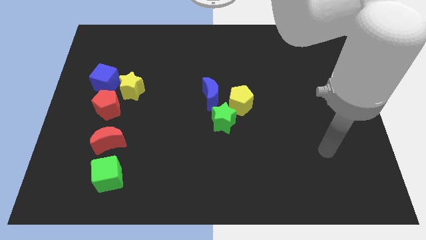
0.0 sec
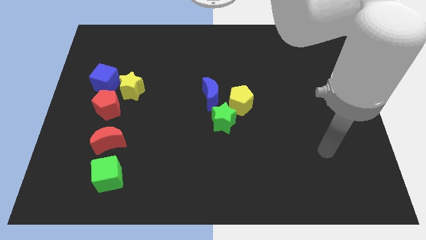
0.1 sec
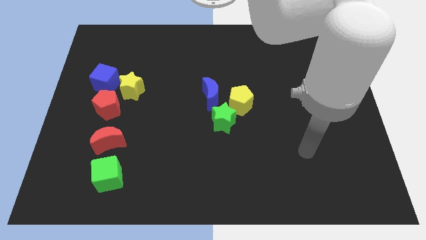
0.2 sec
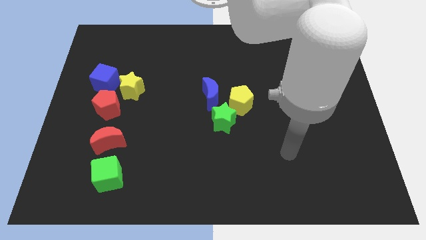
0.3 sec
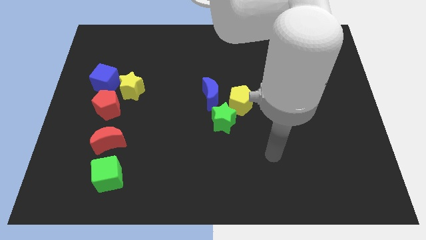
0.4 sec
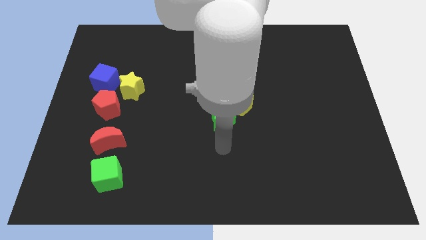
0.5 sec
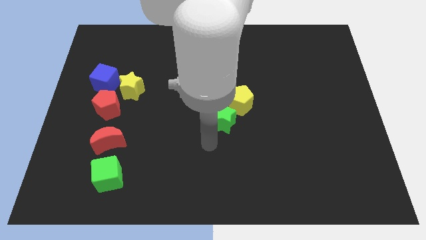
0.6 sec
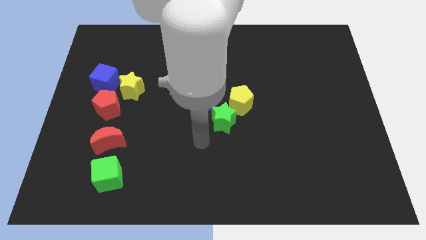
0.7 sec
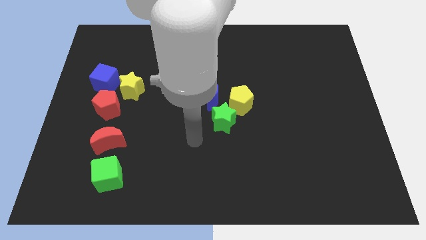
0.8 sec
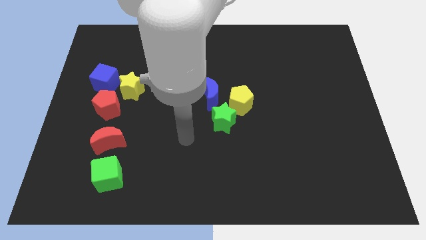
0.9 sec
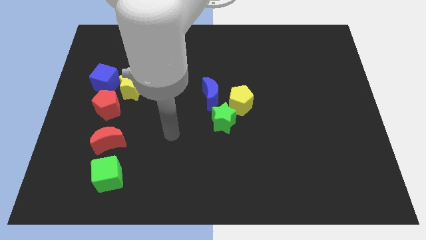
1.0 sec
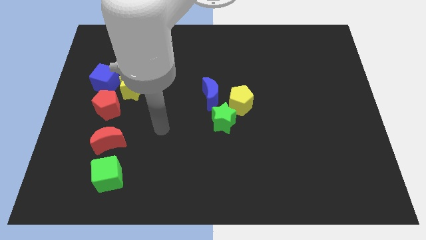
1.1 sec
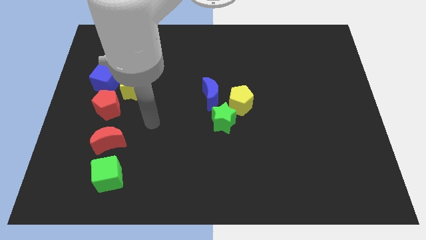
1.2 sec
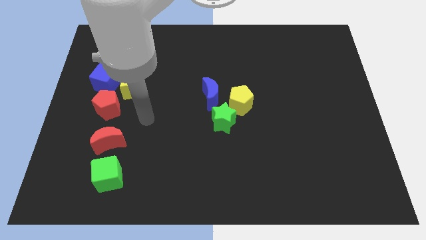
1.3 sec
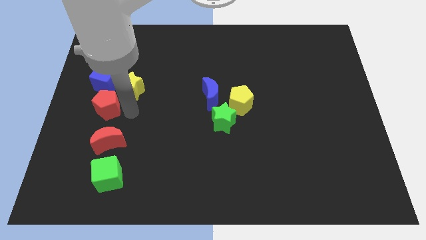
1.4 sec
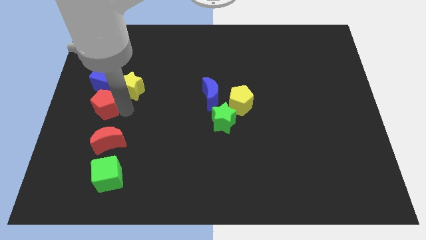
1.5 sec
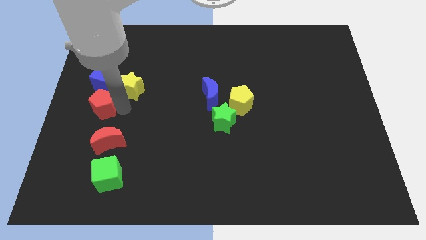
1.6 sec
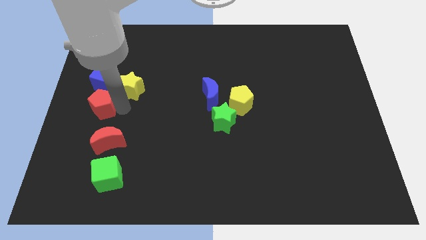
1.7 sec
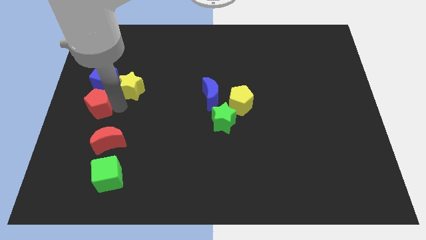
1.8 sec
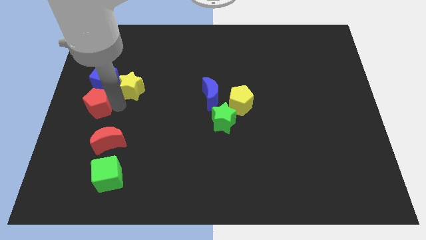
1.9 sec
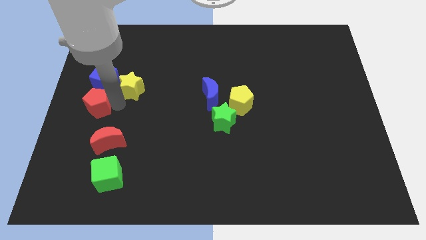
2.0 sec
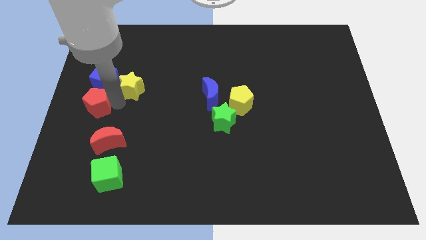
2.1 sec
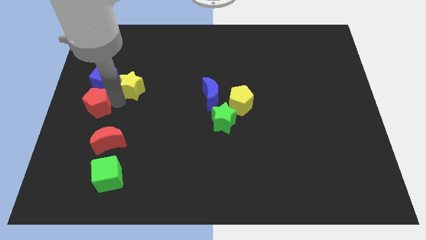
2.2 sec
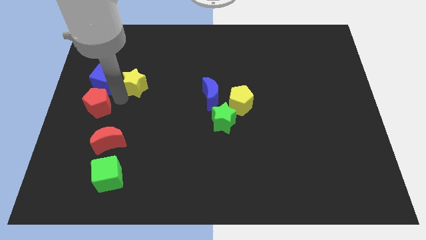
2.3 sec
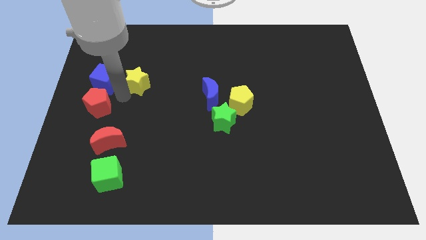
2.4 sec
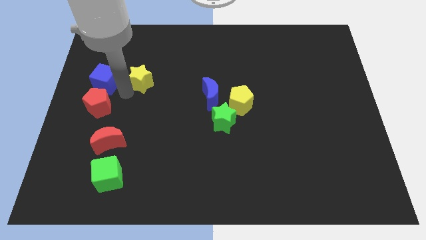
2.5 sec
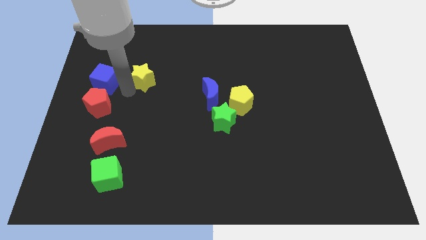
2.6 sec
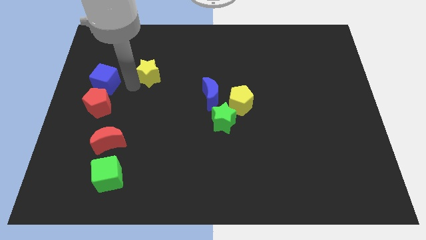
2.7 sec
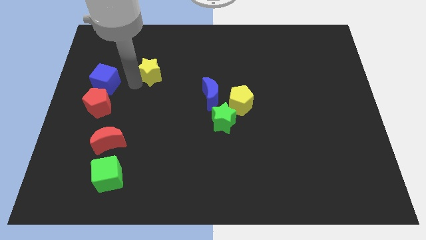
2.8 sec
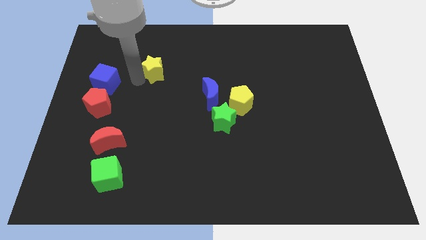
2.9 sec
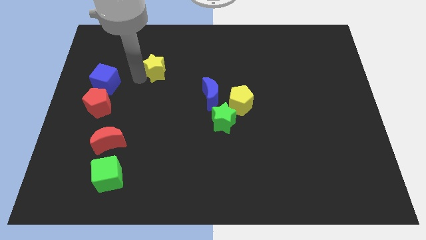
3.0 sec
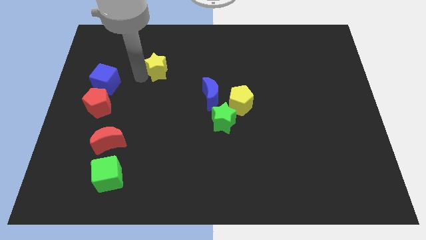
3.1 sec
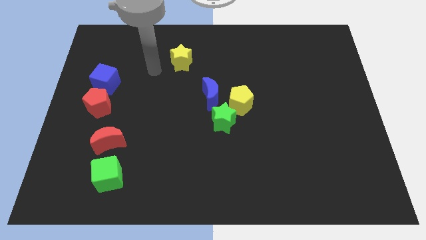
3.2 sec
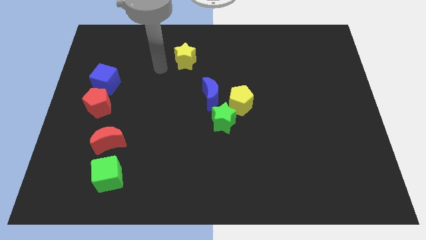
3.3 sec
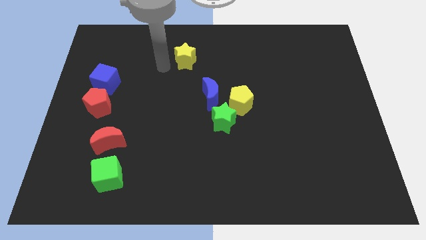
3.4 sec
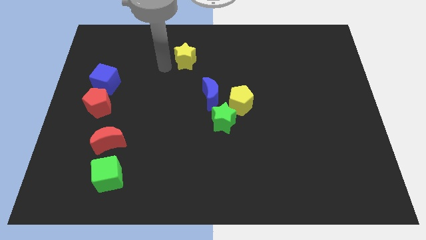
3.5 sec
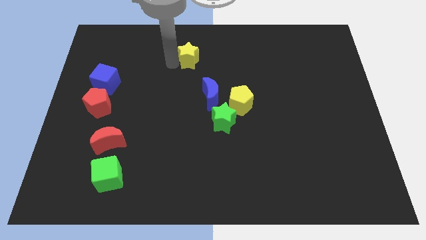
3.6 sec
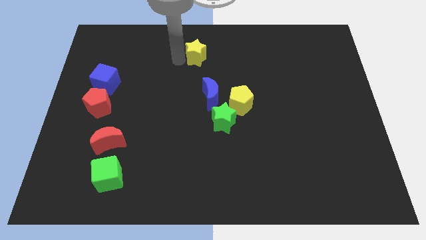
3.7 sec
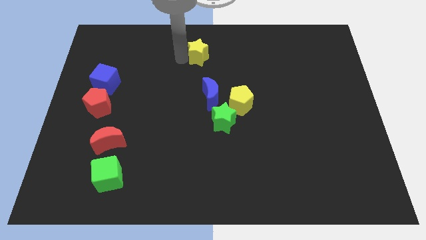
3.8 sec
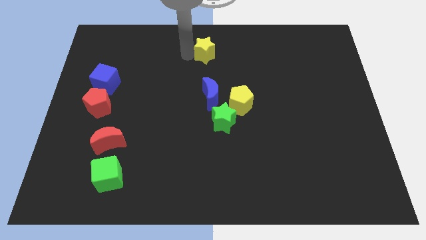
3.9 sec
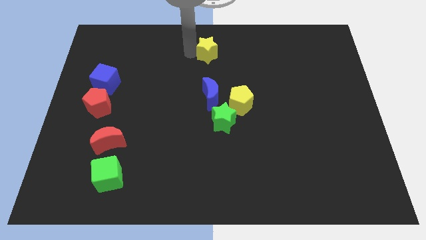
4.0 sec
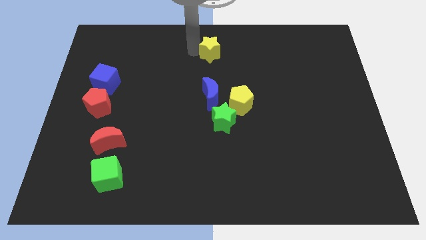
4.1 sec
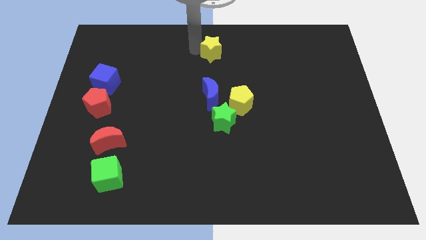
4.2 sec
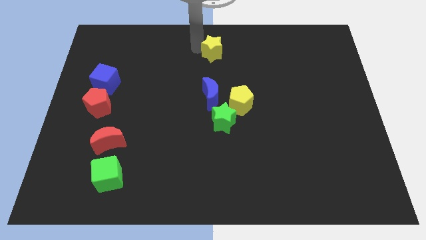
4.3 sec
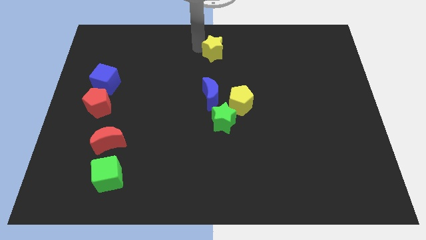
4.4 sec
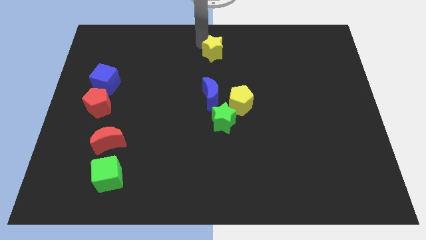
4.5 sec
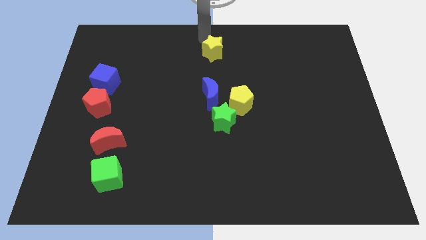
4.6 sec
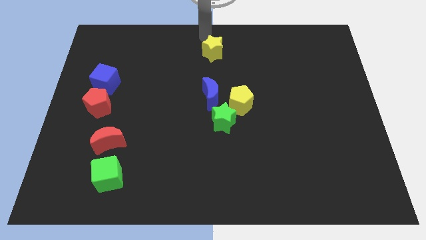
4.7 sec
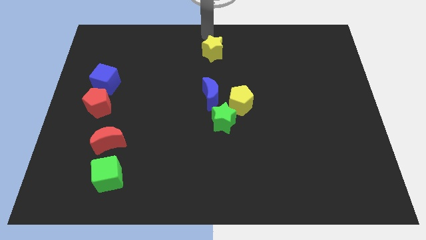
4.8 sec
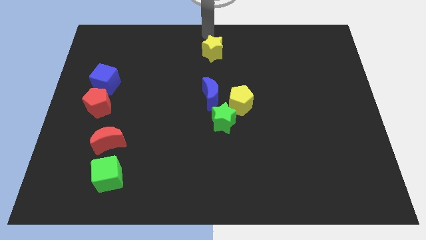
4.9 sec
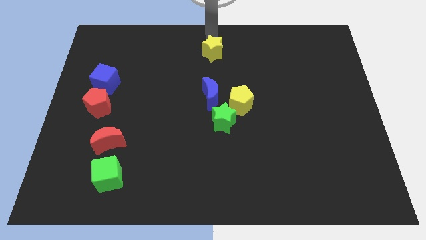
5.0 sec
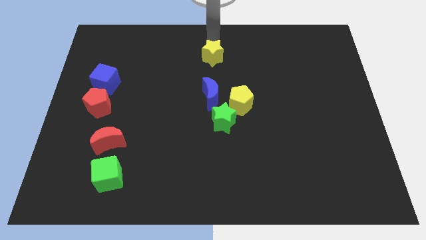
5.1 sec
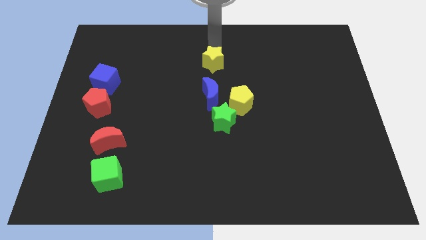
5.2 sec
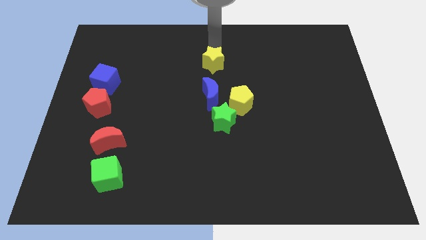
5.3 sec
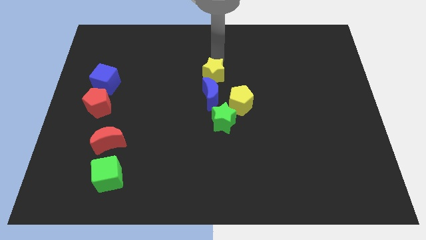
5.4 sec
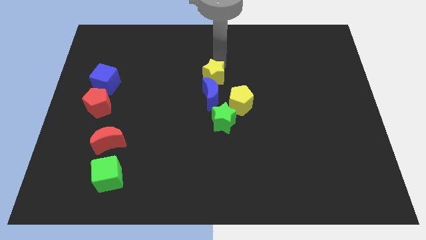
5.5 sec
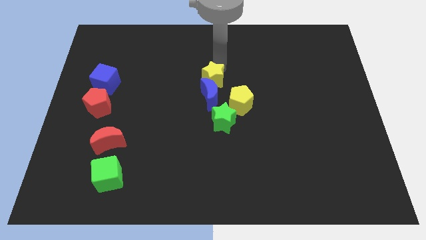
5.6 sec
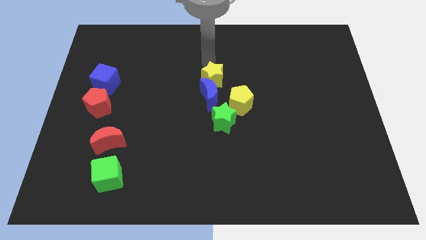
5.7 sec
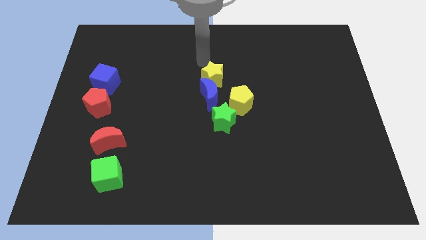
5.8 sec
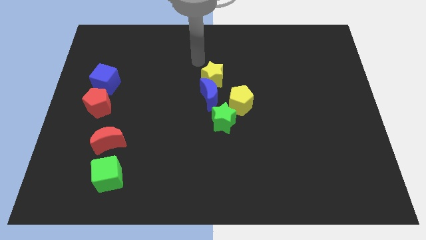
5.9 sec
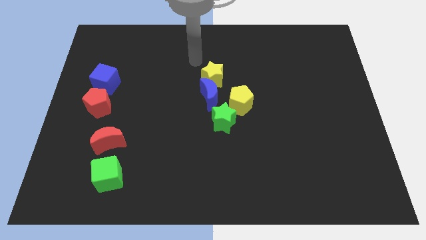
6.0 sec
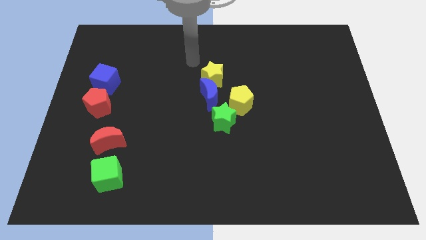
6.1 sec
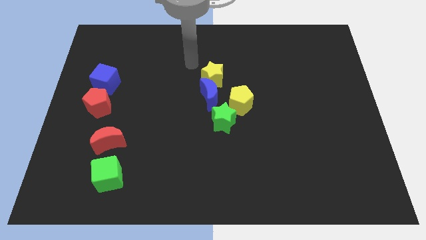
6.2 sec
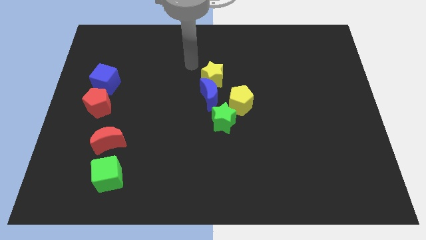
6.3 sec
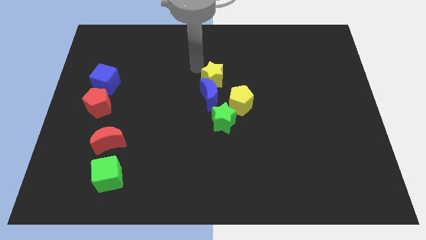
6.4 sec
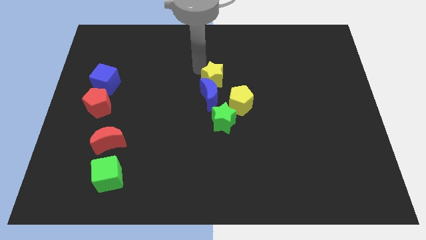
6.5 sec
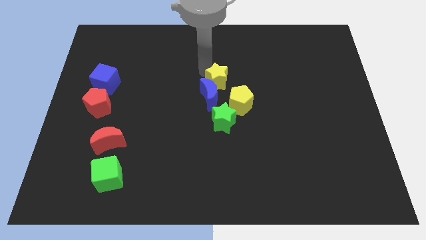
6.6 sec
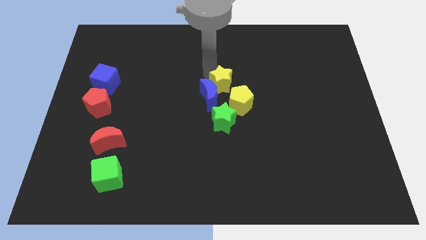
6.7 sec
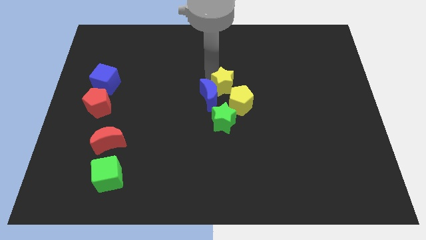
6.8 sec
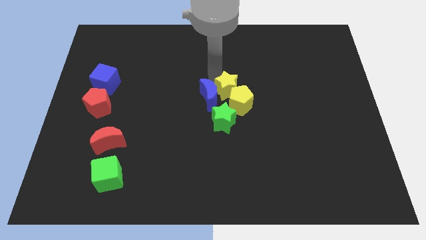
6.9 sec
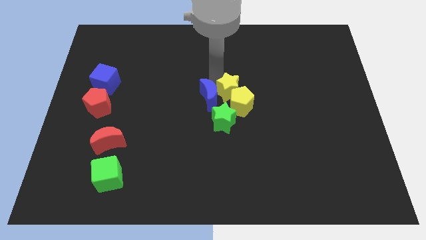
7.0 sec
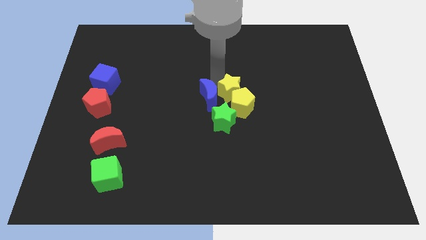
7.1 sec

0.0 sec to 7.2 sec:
slide the yellow star close to the yellow pentagon

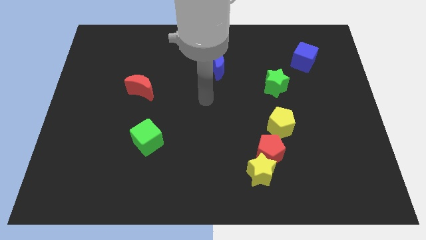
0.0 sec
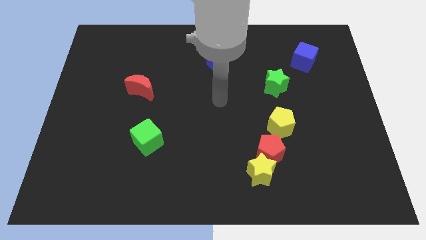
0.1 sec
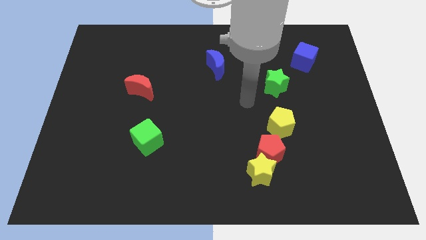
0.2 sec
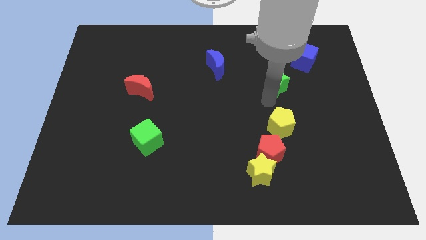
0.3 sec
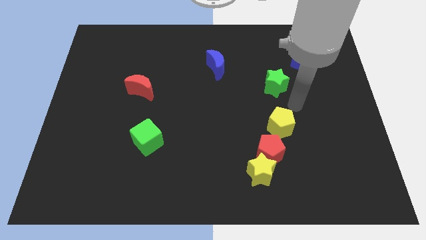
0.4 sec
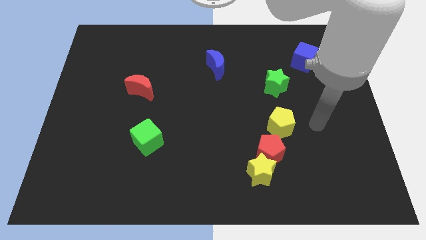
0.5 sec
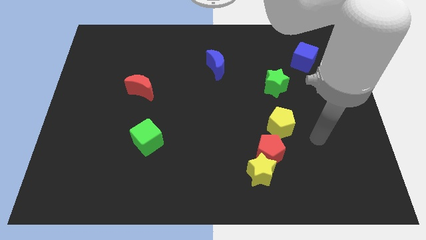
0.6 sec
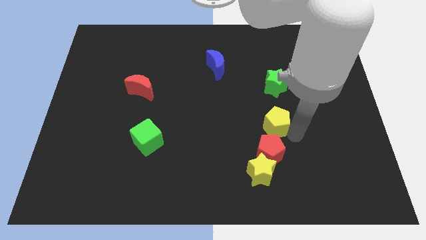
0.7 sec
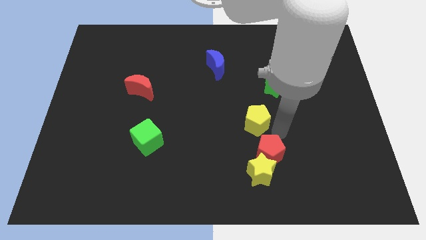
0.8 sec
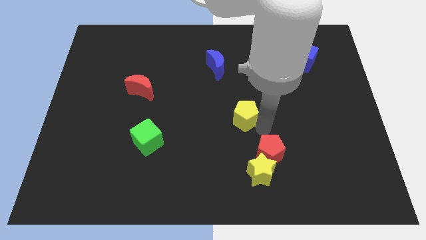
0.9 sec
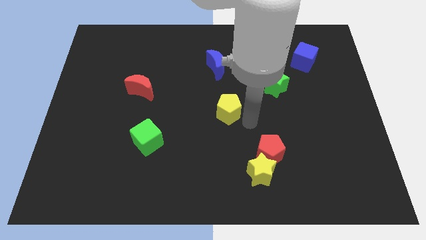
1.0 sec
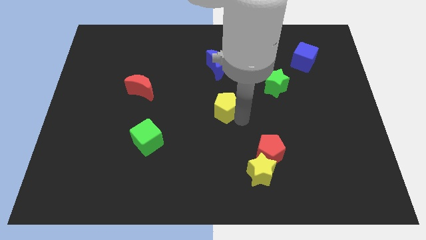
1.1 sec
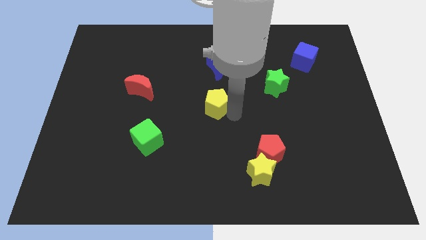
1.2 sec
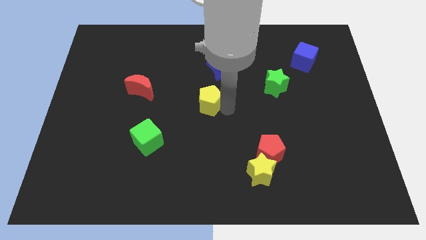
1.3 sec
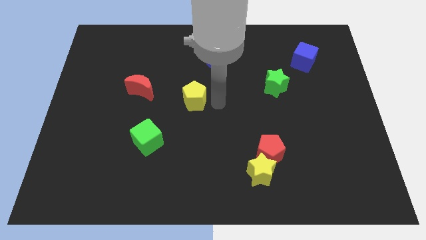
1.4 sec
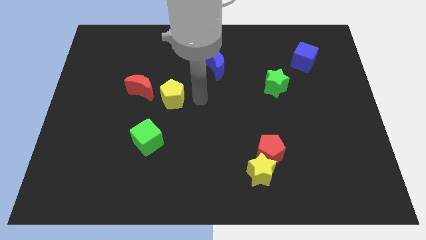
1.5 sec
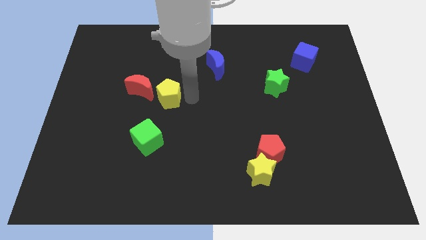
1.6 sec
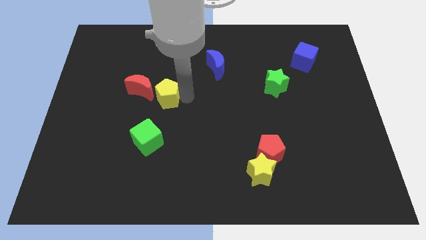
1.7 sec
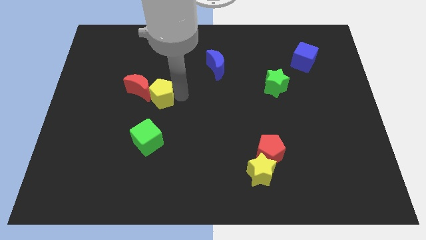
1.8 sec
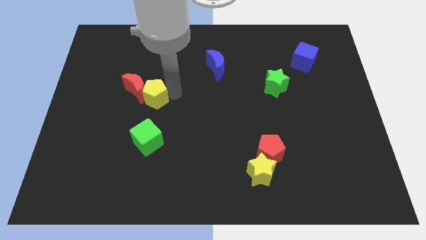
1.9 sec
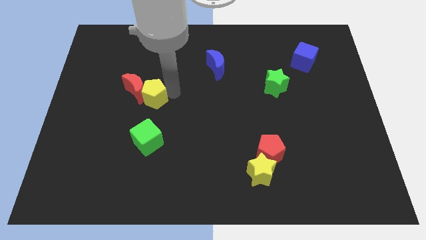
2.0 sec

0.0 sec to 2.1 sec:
move the yellow pentagon close to the red moon
